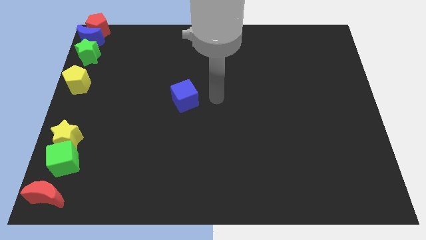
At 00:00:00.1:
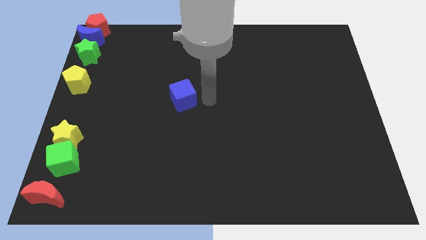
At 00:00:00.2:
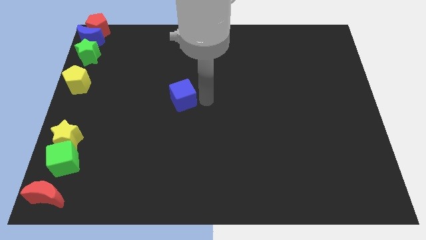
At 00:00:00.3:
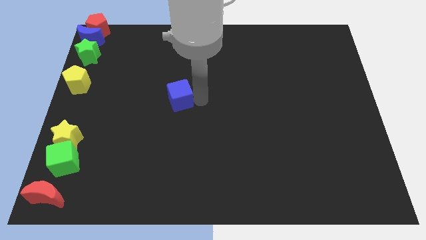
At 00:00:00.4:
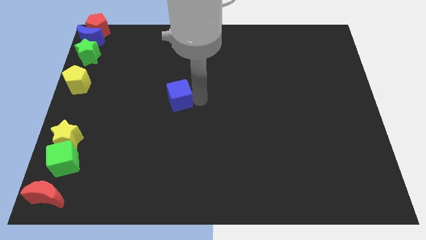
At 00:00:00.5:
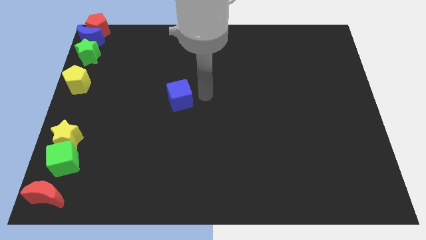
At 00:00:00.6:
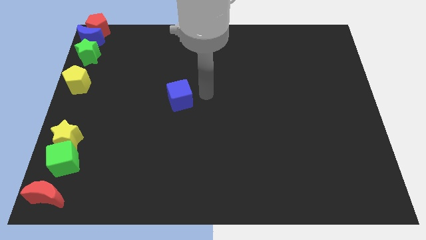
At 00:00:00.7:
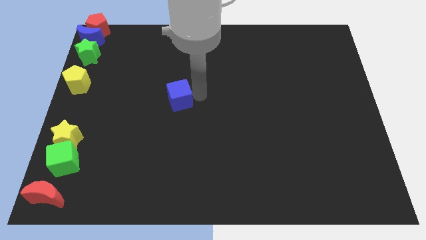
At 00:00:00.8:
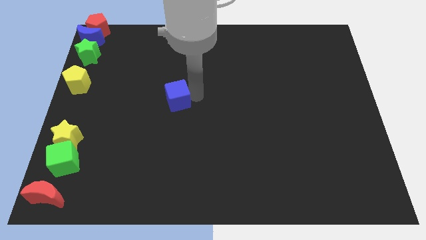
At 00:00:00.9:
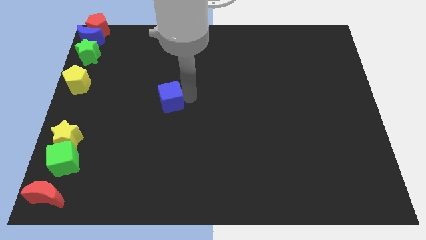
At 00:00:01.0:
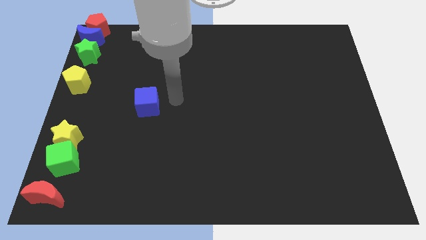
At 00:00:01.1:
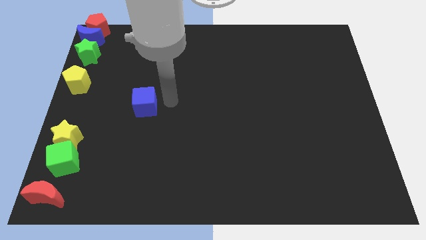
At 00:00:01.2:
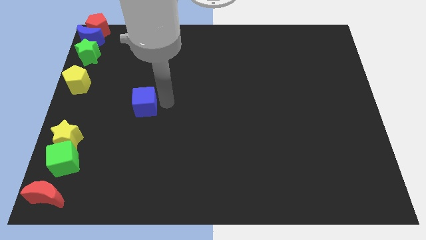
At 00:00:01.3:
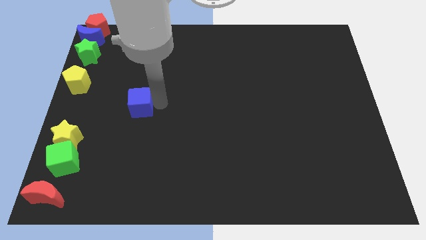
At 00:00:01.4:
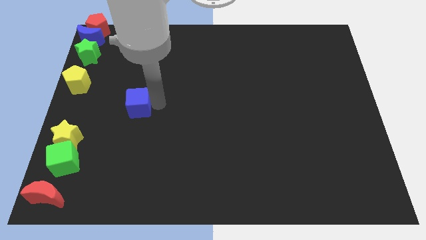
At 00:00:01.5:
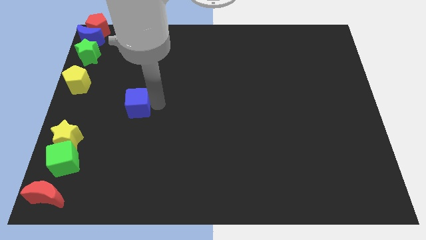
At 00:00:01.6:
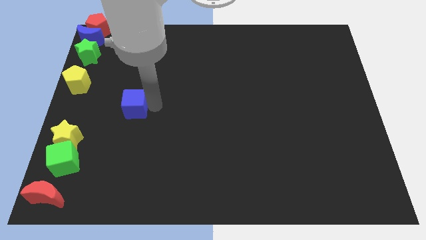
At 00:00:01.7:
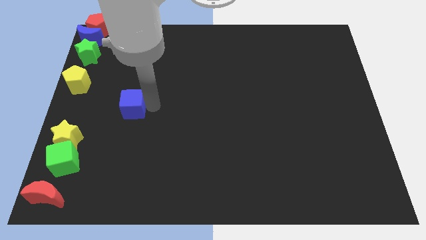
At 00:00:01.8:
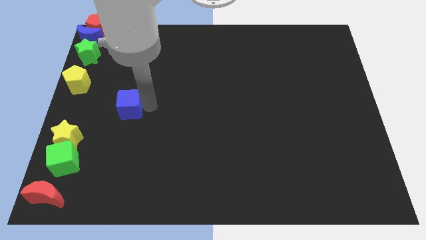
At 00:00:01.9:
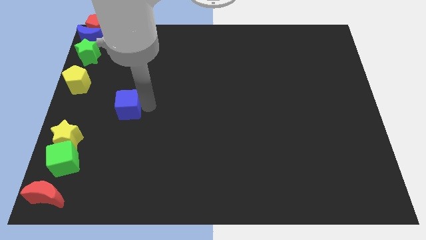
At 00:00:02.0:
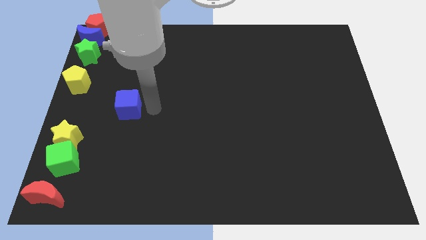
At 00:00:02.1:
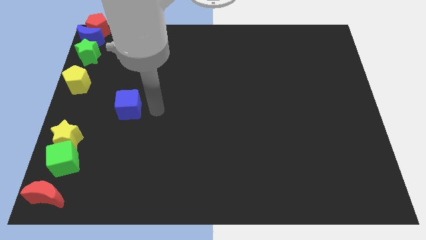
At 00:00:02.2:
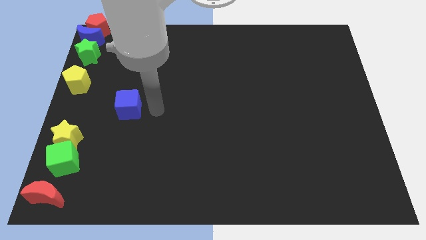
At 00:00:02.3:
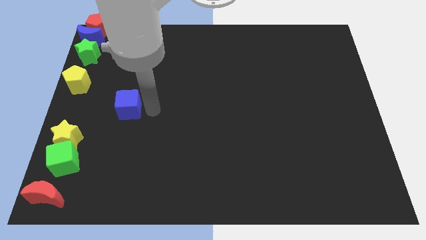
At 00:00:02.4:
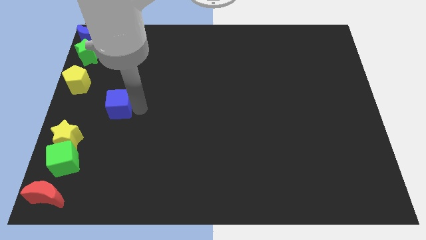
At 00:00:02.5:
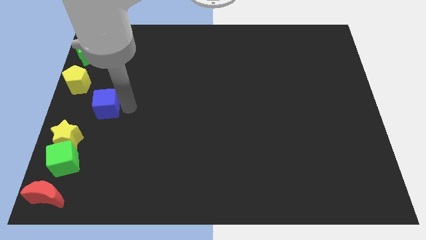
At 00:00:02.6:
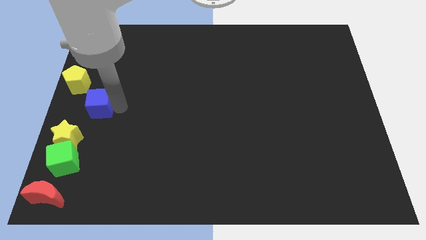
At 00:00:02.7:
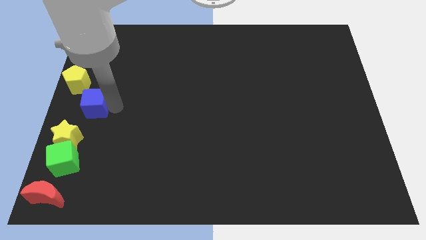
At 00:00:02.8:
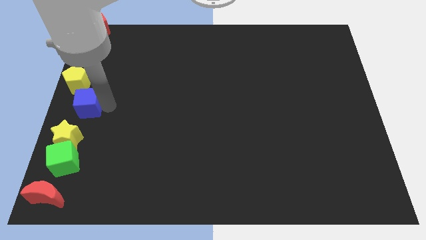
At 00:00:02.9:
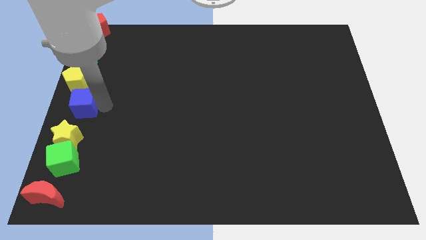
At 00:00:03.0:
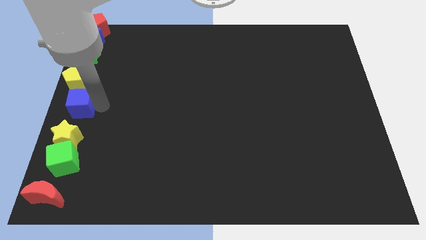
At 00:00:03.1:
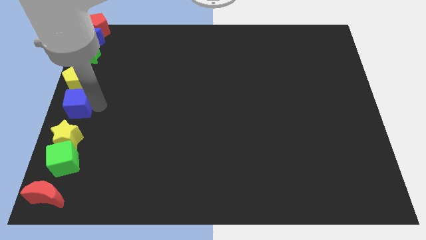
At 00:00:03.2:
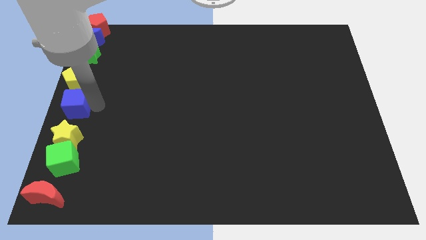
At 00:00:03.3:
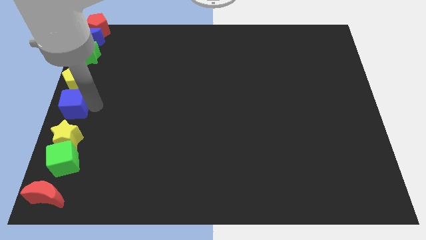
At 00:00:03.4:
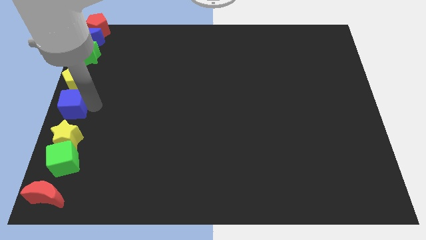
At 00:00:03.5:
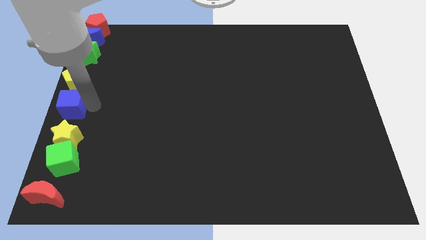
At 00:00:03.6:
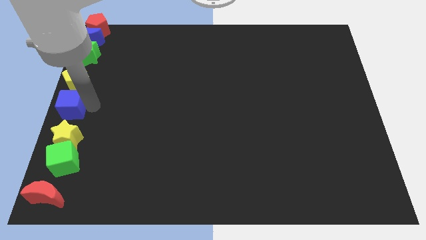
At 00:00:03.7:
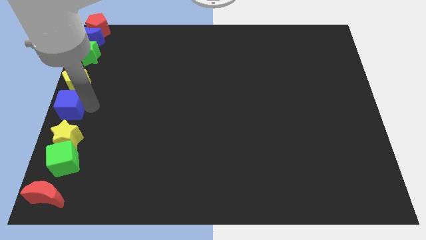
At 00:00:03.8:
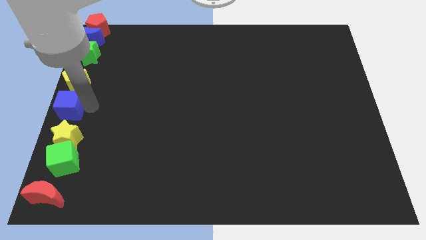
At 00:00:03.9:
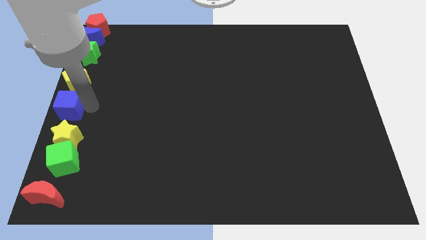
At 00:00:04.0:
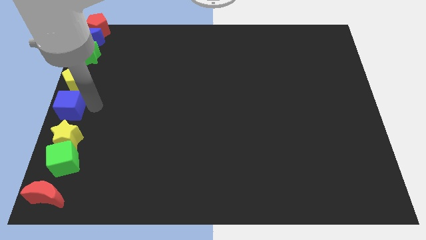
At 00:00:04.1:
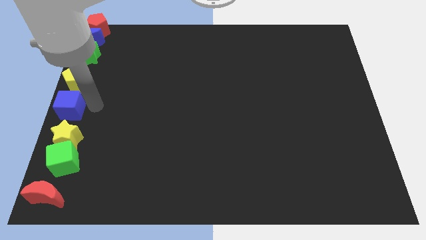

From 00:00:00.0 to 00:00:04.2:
place the blue cube in between the yellow blocks

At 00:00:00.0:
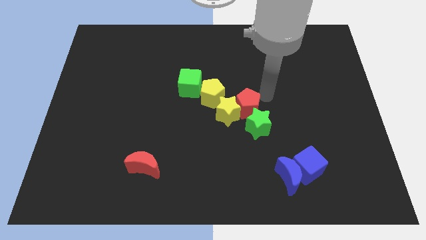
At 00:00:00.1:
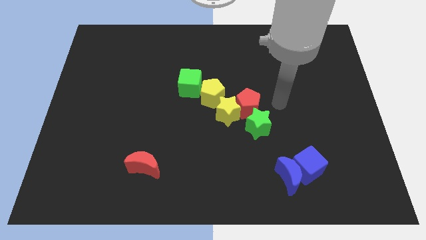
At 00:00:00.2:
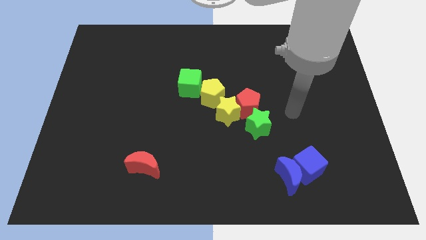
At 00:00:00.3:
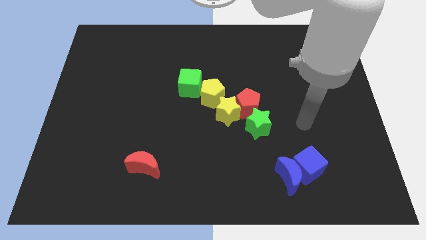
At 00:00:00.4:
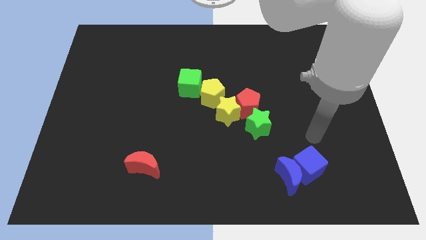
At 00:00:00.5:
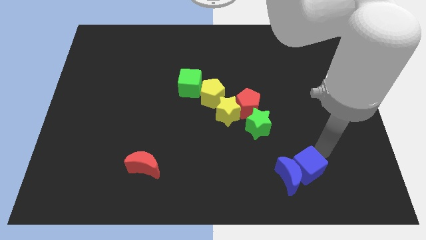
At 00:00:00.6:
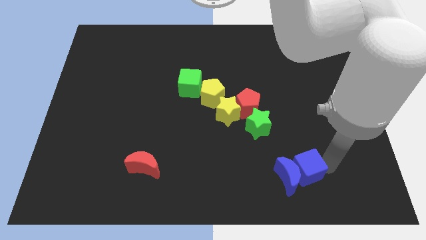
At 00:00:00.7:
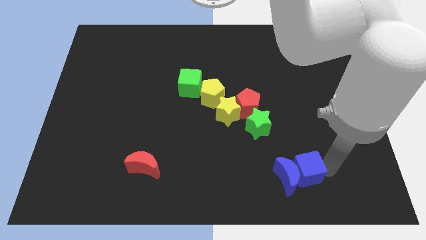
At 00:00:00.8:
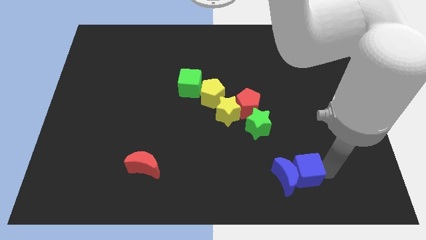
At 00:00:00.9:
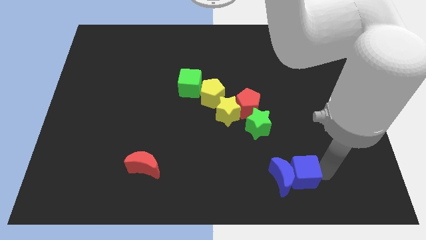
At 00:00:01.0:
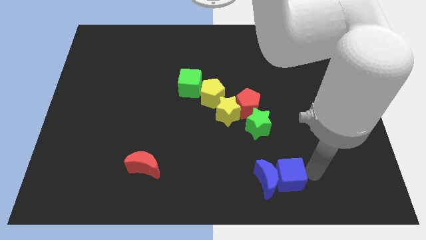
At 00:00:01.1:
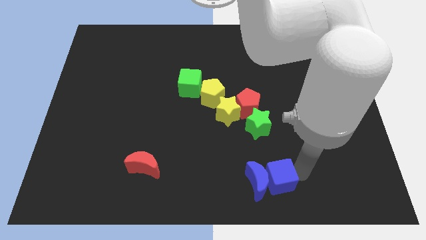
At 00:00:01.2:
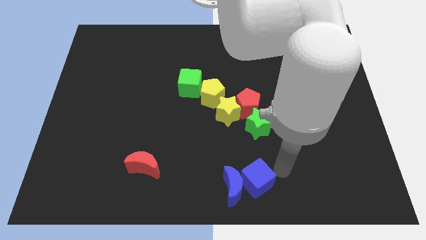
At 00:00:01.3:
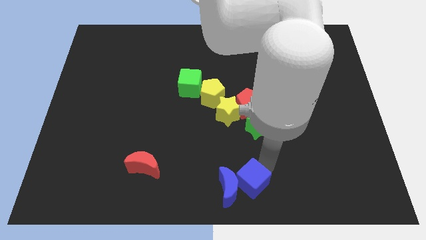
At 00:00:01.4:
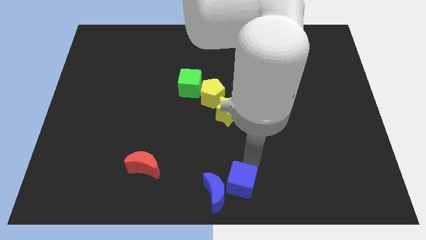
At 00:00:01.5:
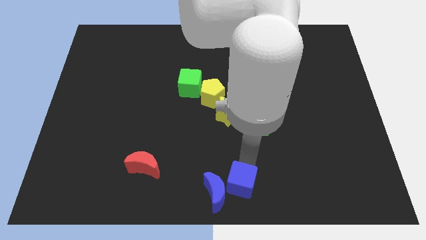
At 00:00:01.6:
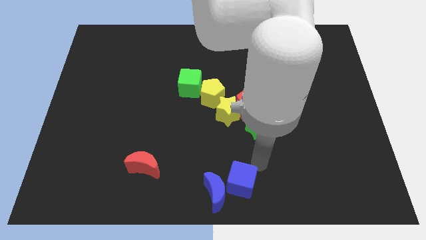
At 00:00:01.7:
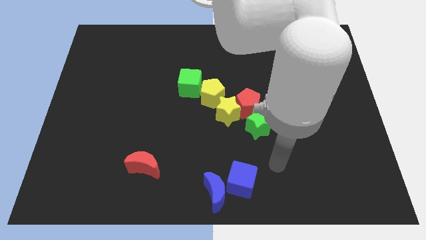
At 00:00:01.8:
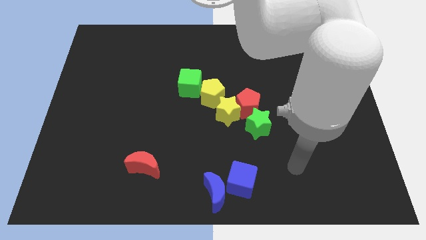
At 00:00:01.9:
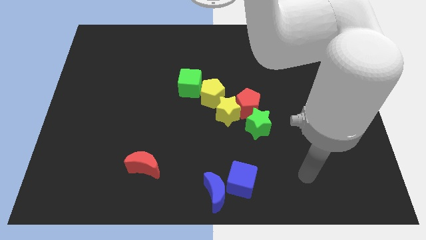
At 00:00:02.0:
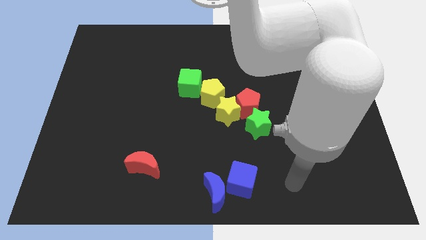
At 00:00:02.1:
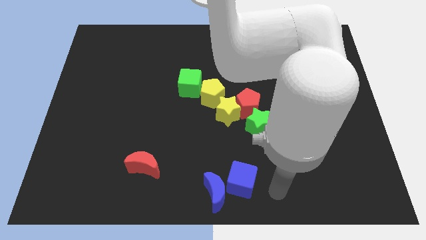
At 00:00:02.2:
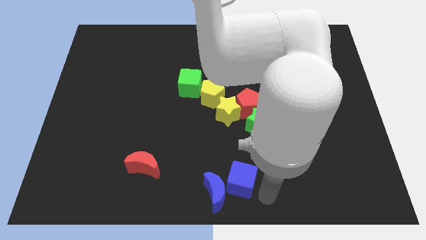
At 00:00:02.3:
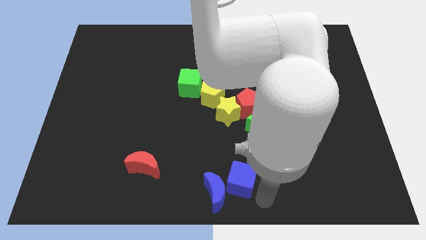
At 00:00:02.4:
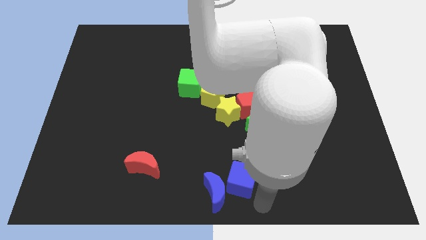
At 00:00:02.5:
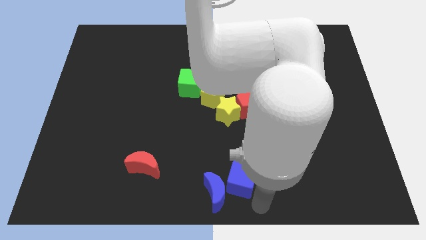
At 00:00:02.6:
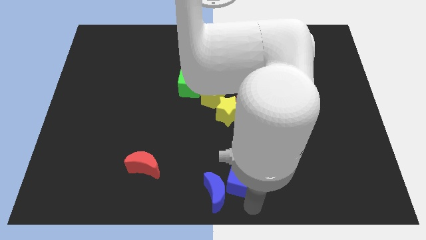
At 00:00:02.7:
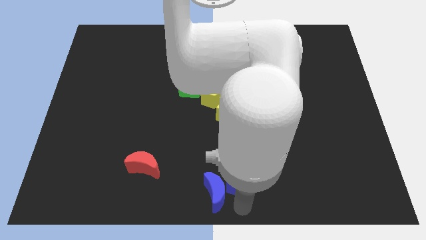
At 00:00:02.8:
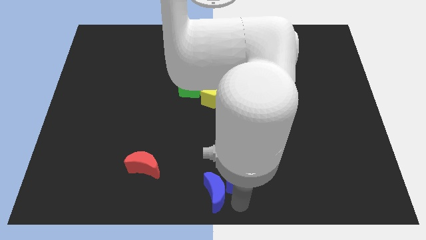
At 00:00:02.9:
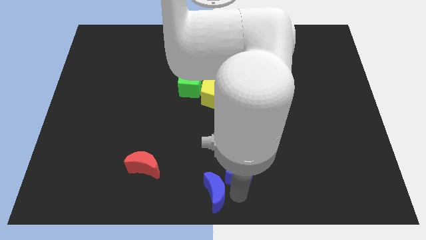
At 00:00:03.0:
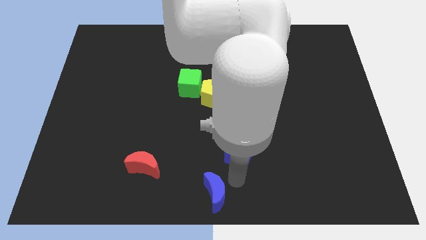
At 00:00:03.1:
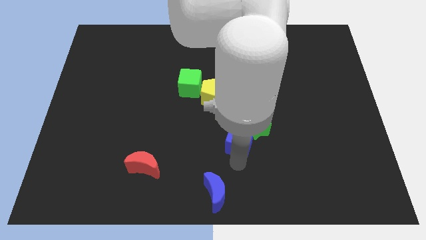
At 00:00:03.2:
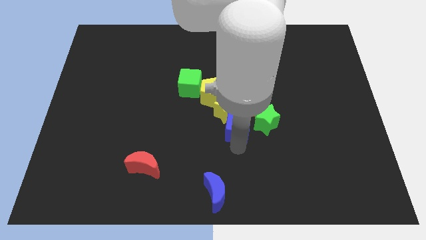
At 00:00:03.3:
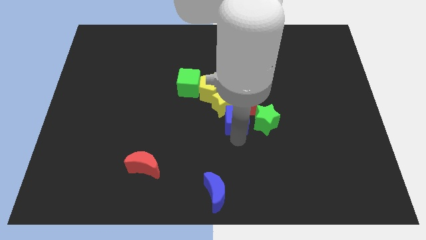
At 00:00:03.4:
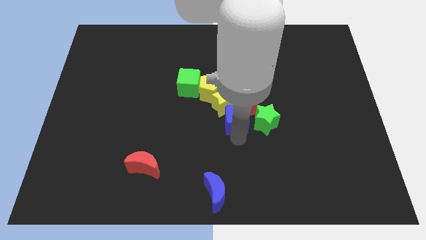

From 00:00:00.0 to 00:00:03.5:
move the blue cube to the bottom side of the yellow star

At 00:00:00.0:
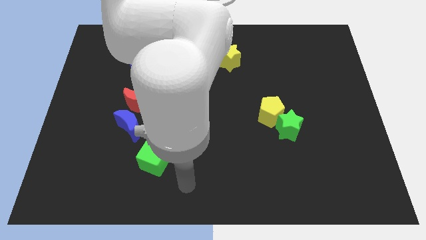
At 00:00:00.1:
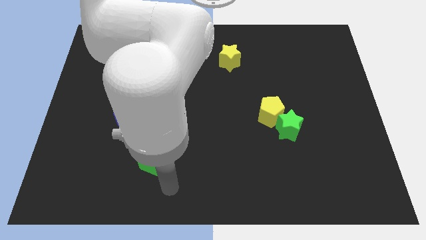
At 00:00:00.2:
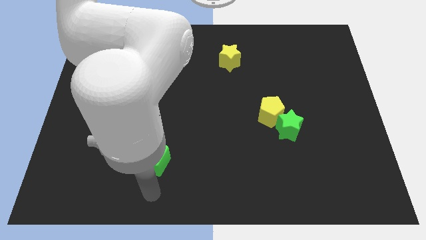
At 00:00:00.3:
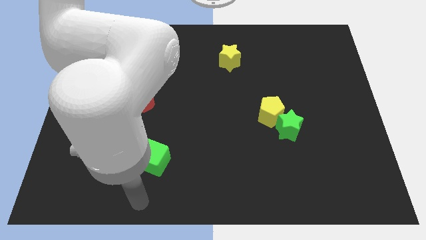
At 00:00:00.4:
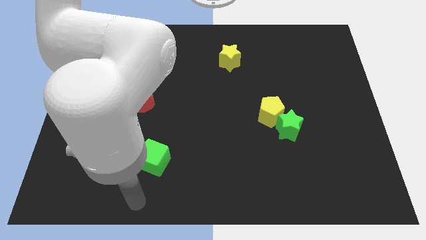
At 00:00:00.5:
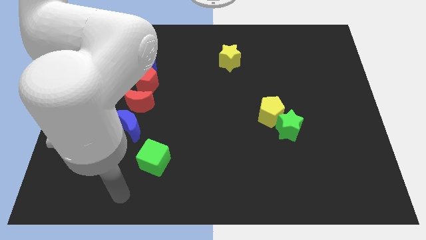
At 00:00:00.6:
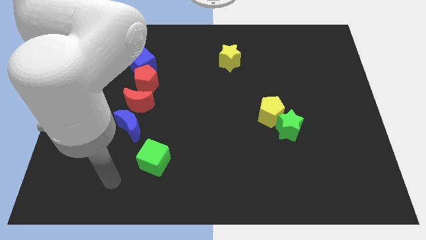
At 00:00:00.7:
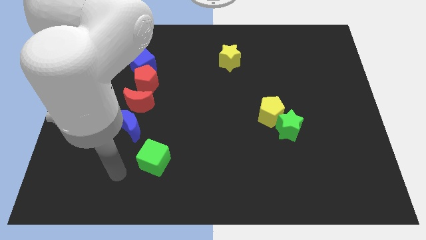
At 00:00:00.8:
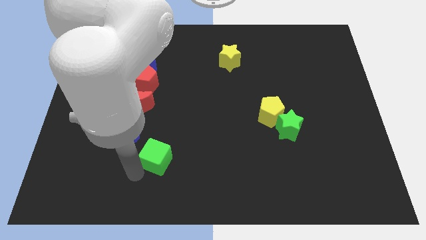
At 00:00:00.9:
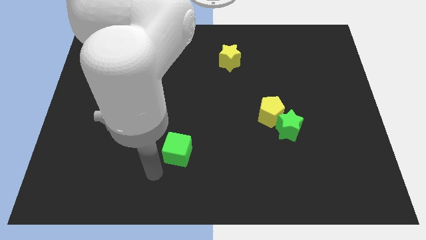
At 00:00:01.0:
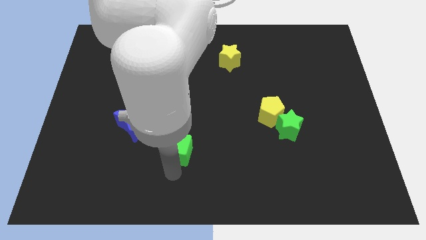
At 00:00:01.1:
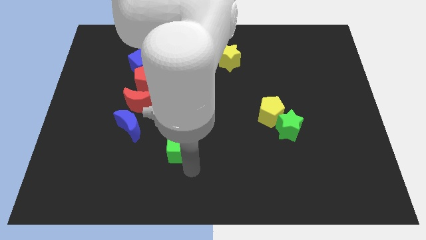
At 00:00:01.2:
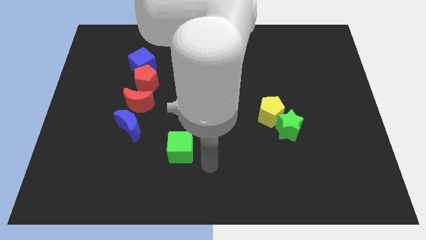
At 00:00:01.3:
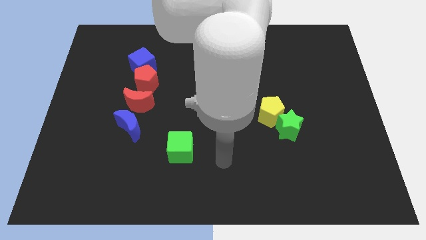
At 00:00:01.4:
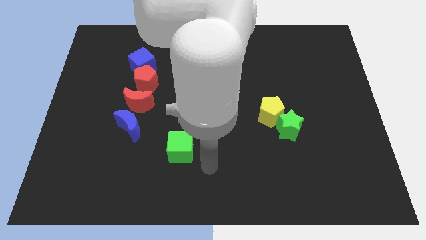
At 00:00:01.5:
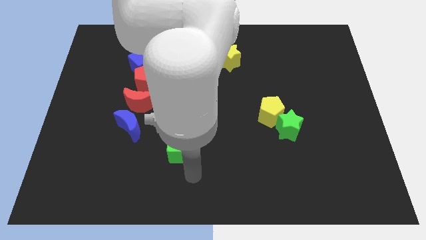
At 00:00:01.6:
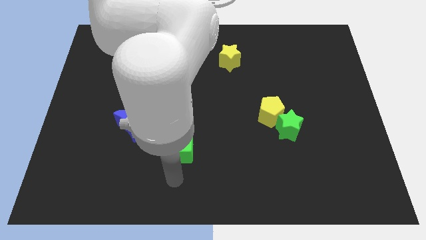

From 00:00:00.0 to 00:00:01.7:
push the green cube towards the top of the board
